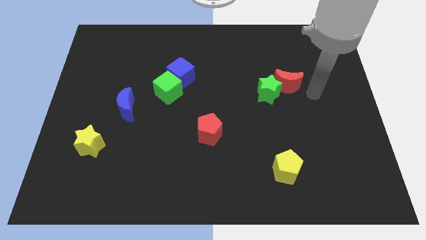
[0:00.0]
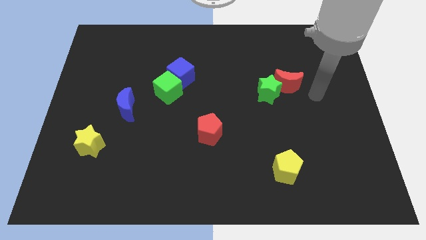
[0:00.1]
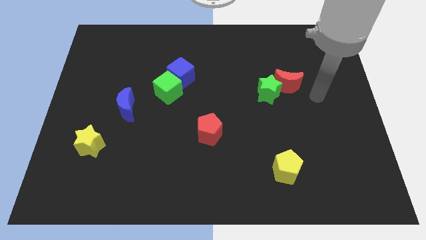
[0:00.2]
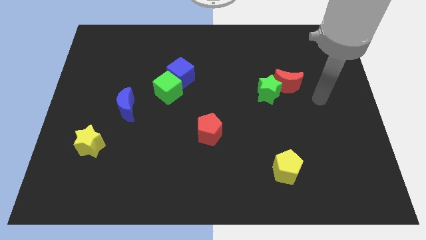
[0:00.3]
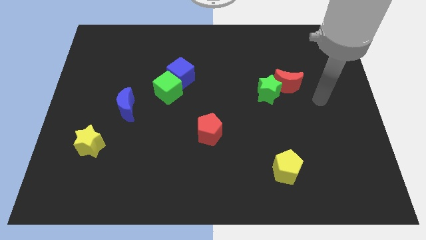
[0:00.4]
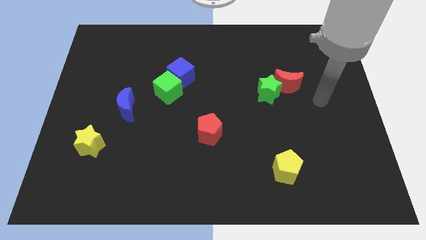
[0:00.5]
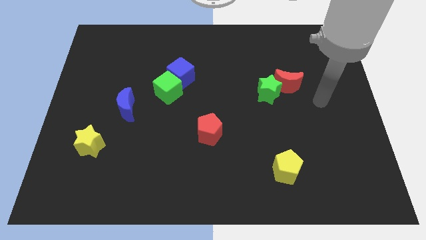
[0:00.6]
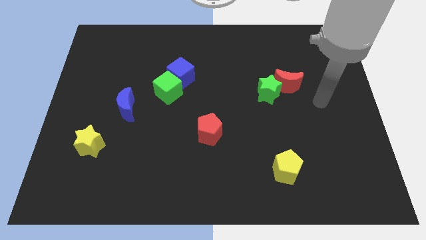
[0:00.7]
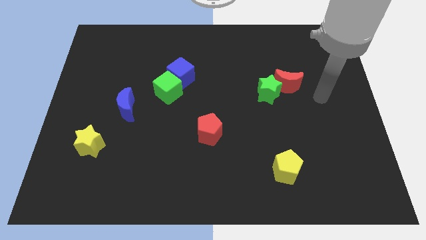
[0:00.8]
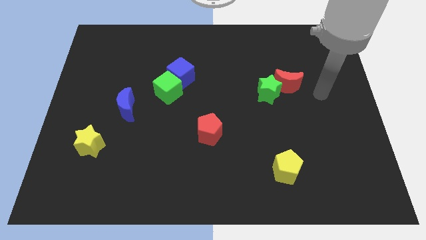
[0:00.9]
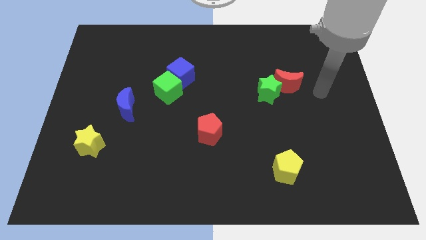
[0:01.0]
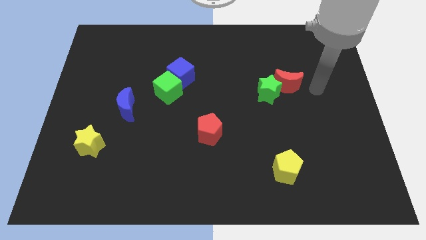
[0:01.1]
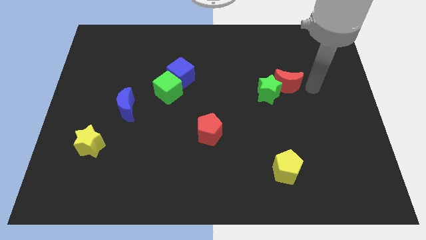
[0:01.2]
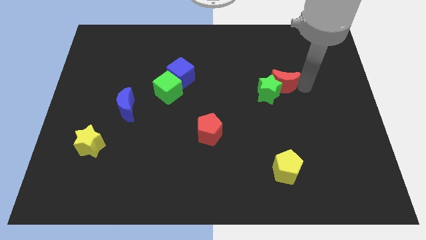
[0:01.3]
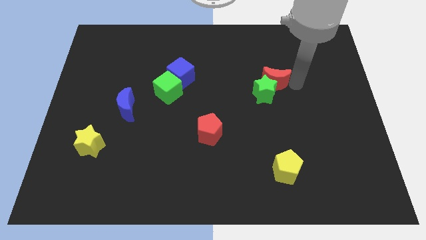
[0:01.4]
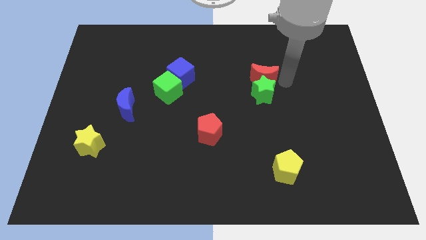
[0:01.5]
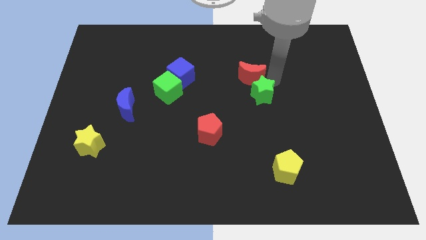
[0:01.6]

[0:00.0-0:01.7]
push the red crescent to the top of the green star

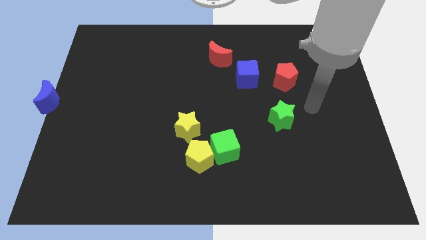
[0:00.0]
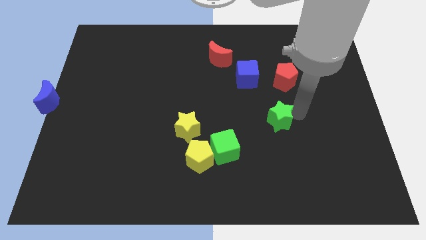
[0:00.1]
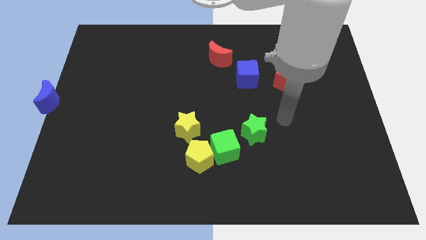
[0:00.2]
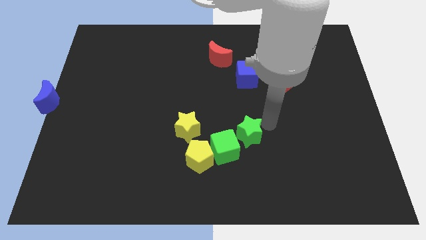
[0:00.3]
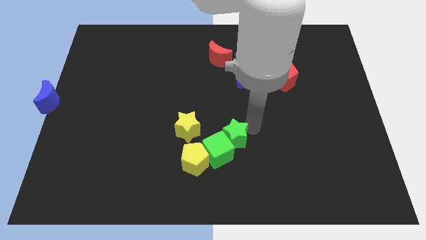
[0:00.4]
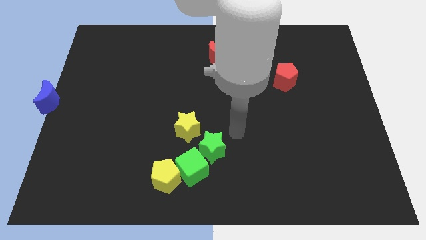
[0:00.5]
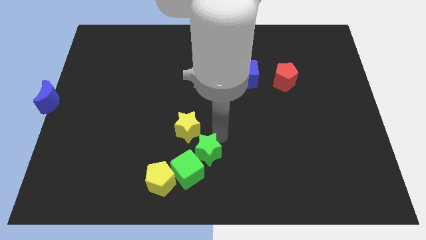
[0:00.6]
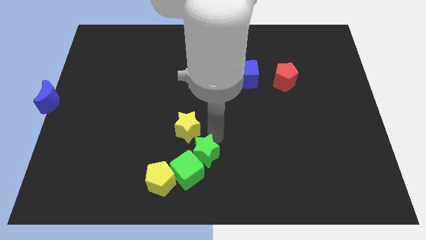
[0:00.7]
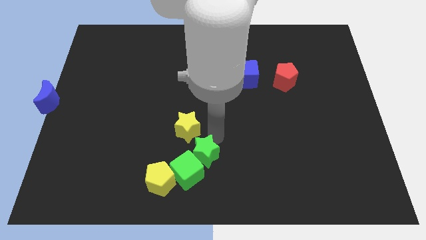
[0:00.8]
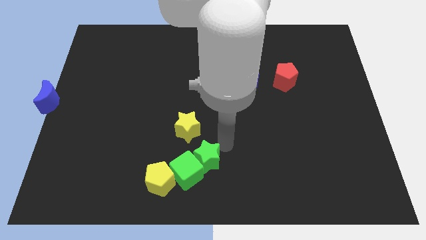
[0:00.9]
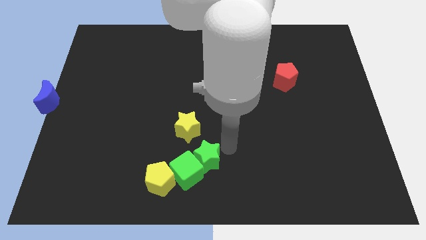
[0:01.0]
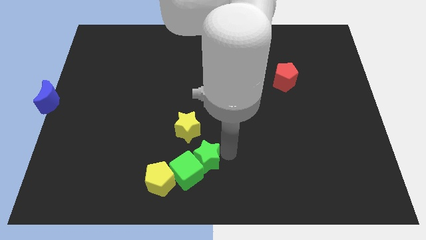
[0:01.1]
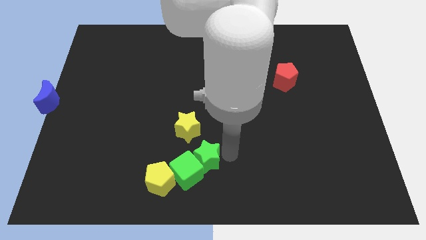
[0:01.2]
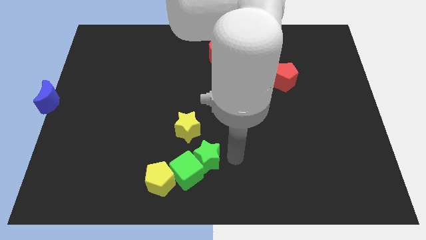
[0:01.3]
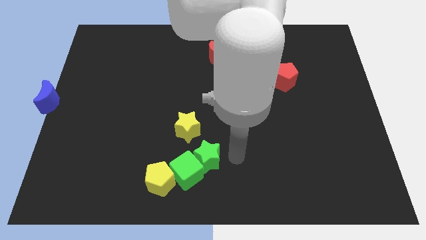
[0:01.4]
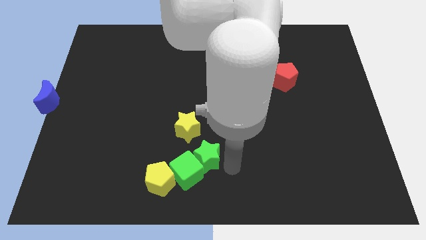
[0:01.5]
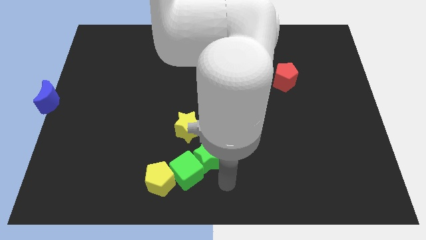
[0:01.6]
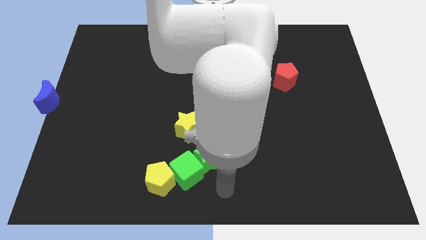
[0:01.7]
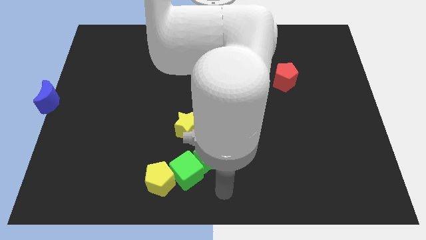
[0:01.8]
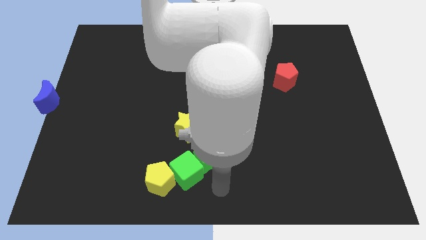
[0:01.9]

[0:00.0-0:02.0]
push green star to the center

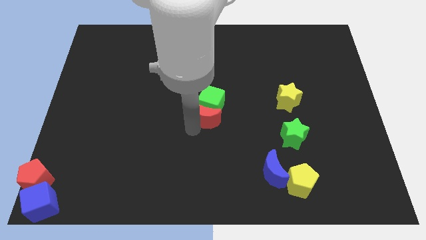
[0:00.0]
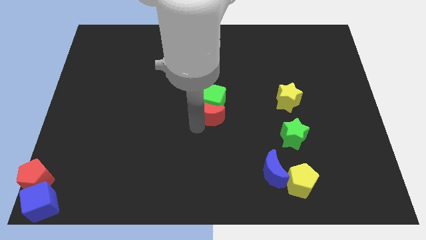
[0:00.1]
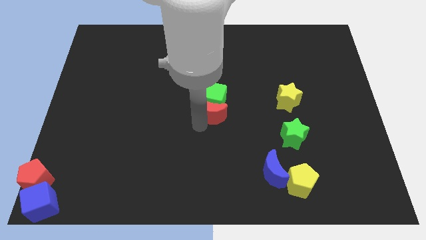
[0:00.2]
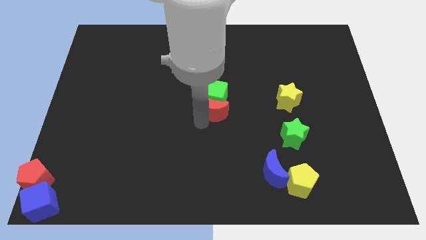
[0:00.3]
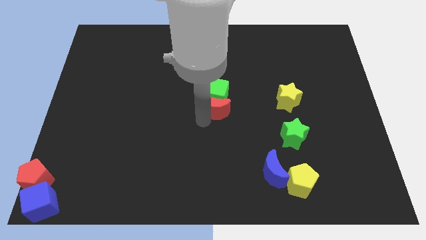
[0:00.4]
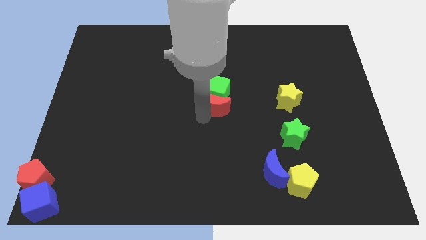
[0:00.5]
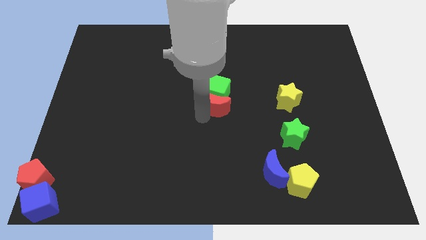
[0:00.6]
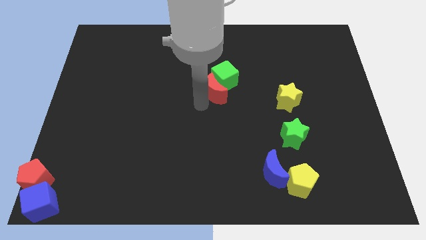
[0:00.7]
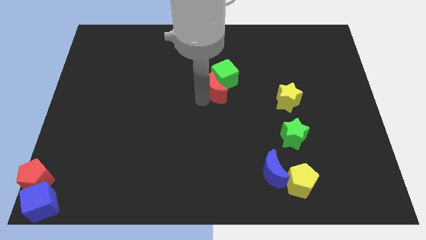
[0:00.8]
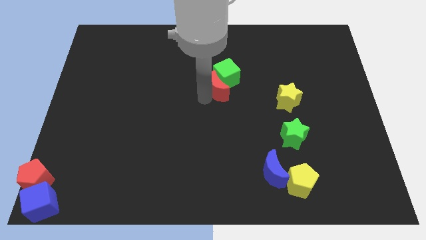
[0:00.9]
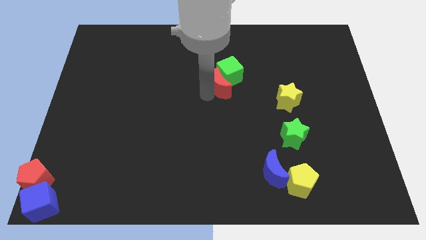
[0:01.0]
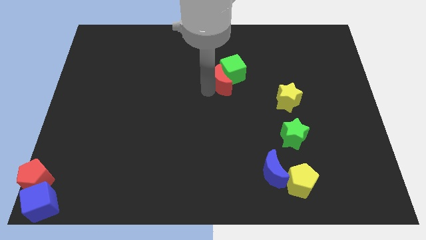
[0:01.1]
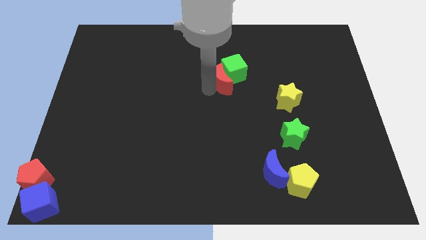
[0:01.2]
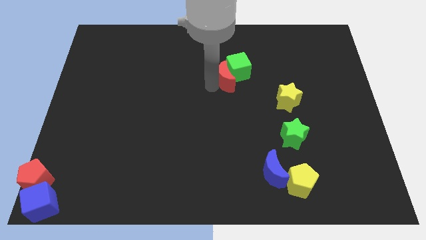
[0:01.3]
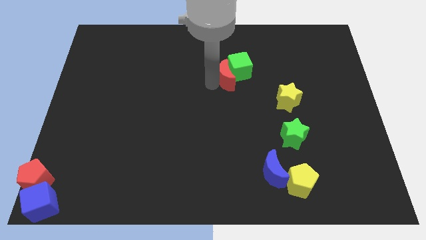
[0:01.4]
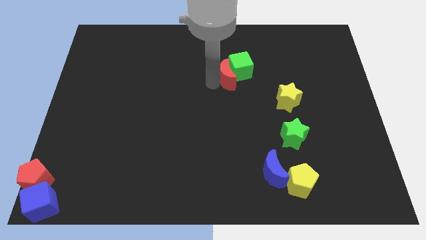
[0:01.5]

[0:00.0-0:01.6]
move the red moon and green cube towards the center

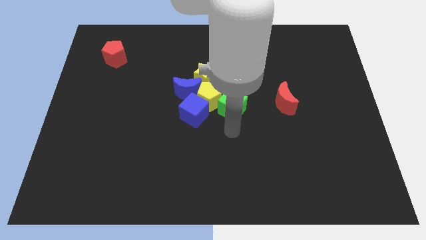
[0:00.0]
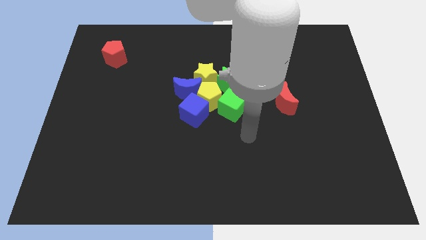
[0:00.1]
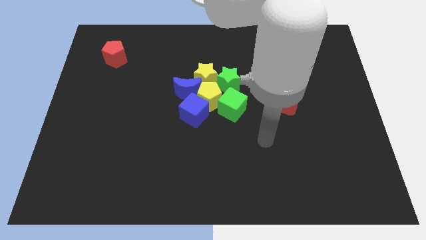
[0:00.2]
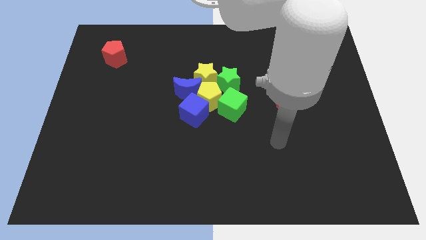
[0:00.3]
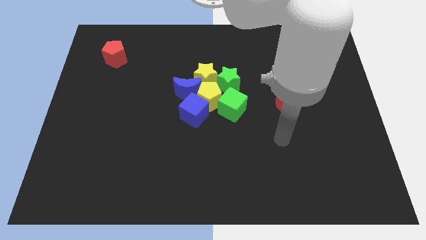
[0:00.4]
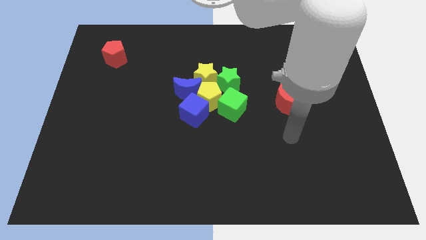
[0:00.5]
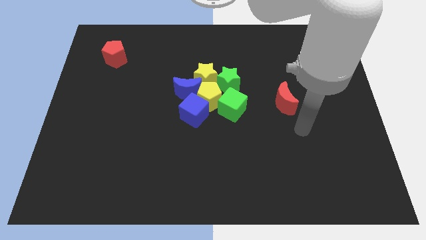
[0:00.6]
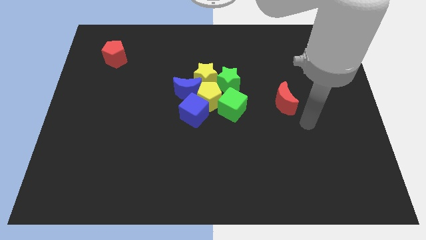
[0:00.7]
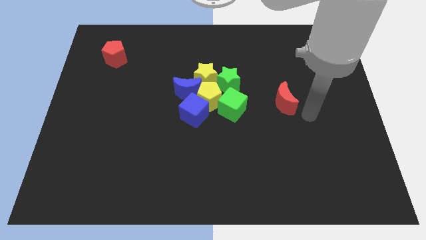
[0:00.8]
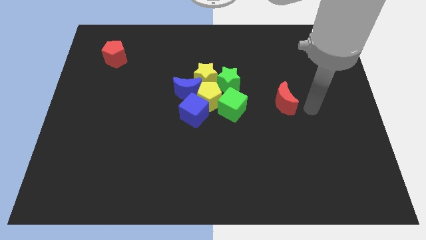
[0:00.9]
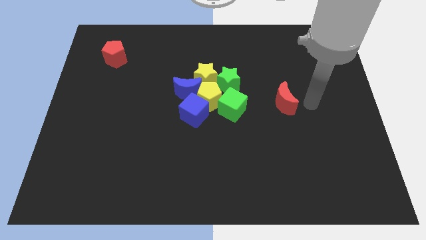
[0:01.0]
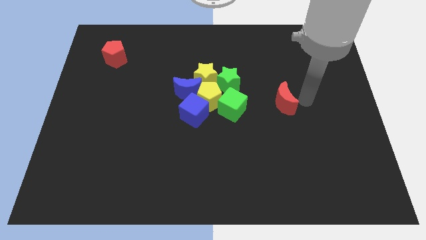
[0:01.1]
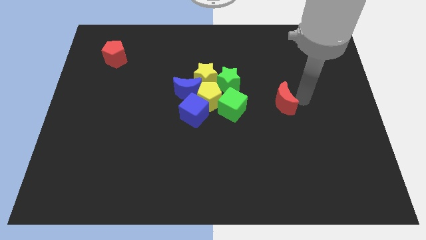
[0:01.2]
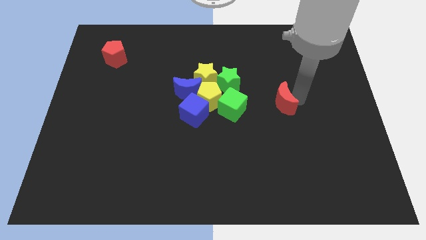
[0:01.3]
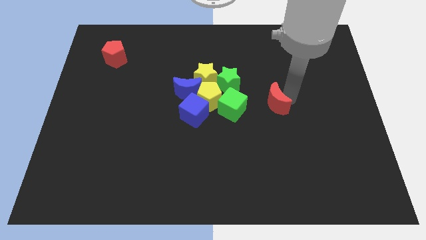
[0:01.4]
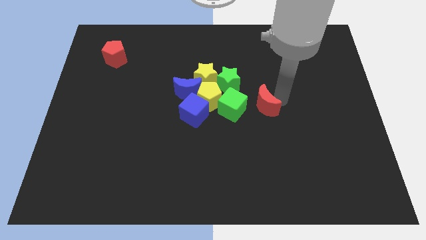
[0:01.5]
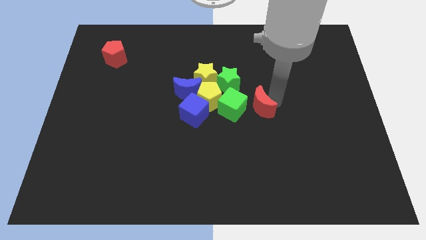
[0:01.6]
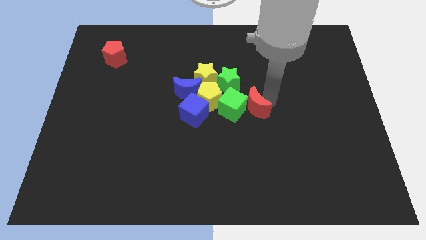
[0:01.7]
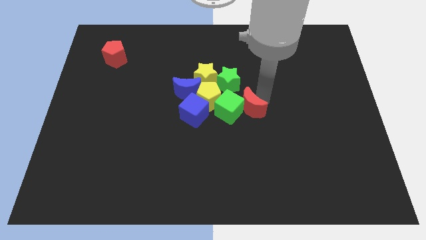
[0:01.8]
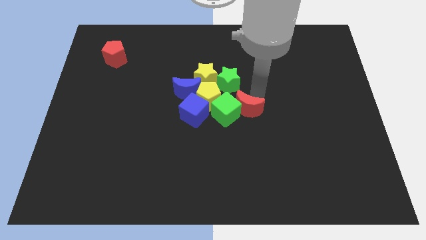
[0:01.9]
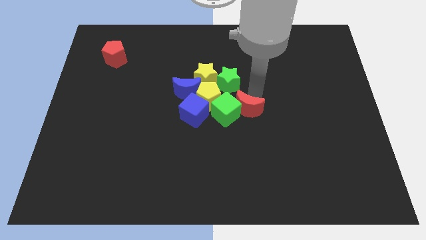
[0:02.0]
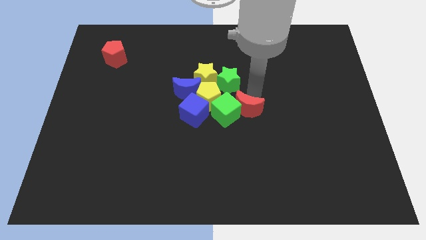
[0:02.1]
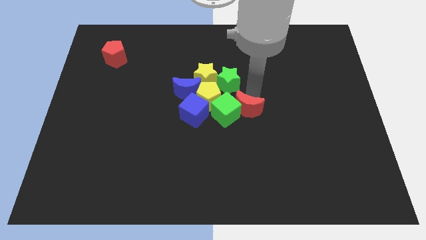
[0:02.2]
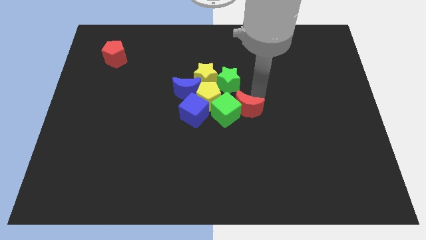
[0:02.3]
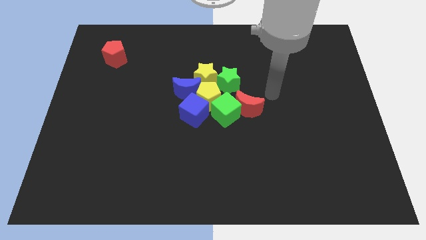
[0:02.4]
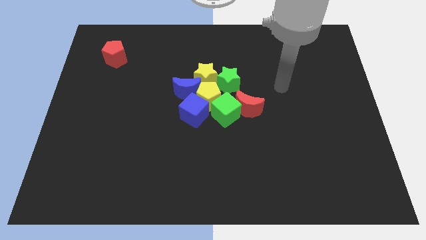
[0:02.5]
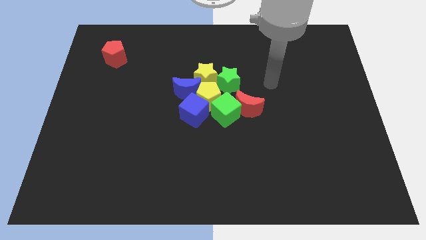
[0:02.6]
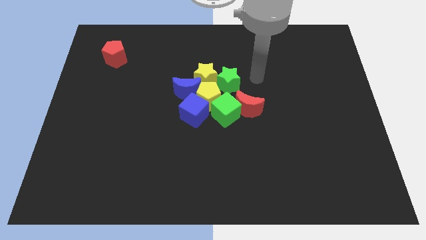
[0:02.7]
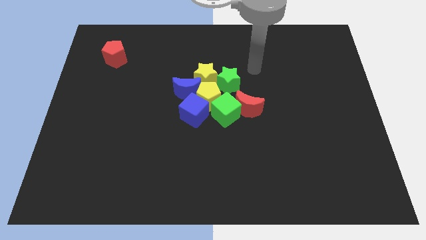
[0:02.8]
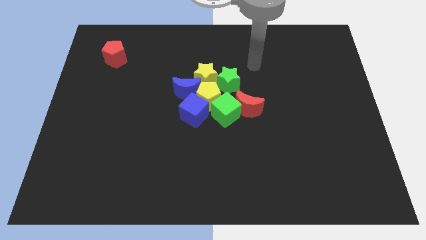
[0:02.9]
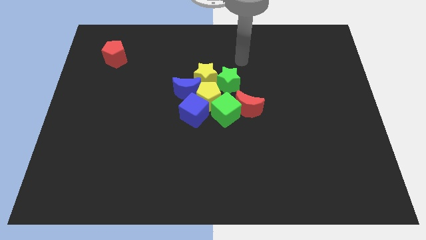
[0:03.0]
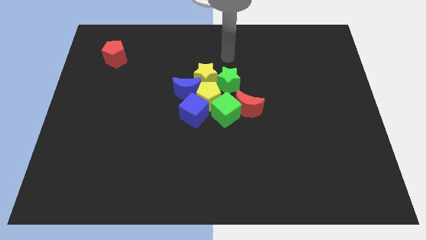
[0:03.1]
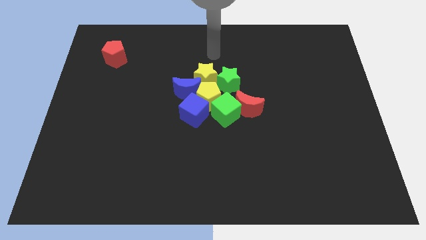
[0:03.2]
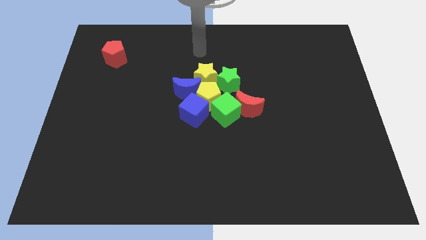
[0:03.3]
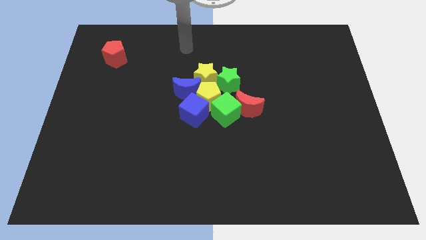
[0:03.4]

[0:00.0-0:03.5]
move the red crescent to the right of the green cube

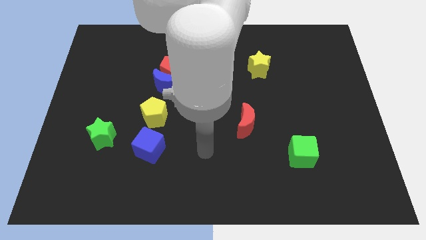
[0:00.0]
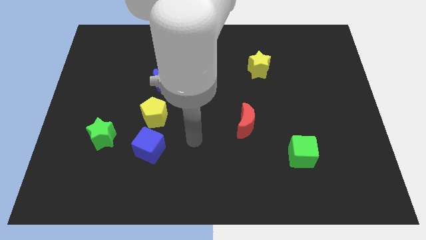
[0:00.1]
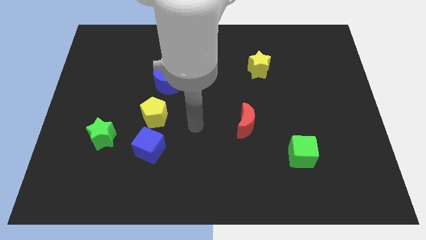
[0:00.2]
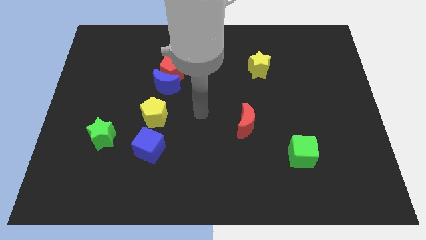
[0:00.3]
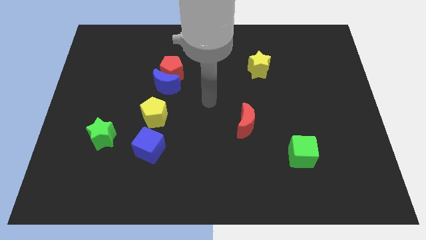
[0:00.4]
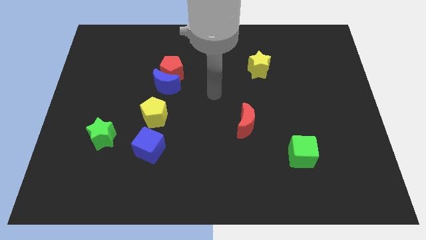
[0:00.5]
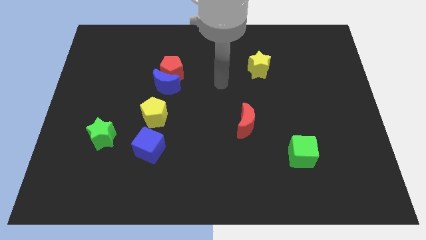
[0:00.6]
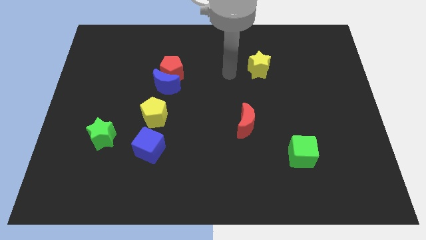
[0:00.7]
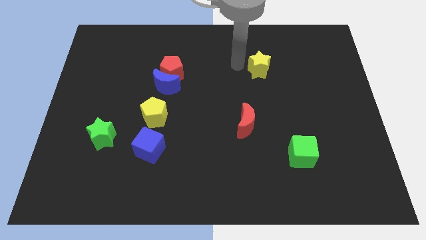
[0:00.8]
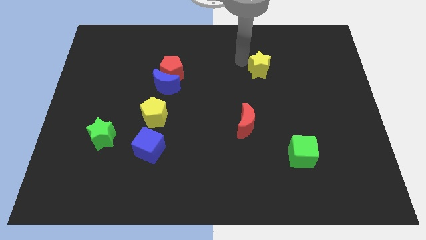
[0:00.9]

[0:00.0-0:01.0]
take your arm to the left side of the yellow star
